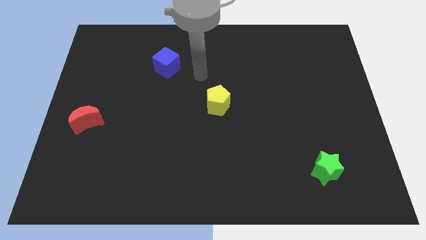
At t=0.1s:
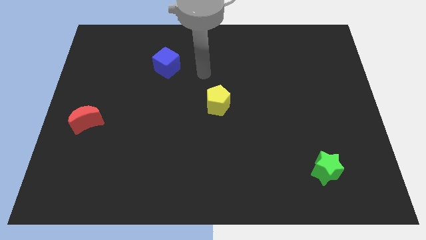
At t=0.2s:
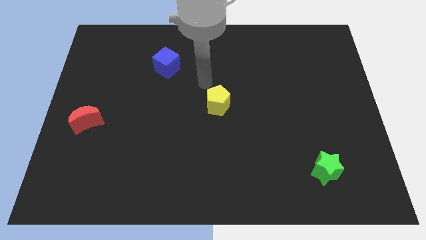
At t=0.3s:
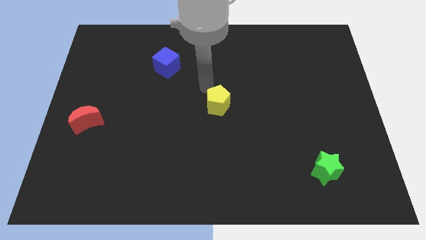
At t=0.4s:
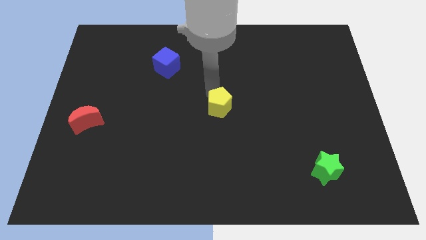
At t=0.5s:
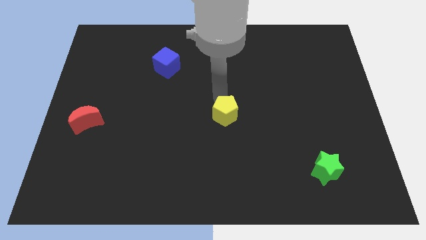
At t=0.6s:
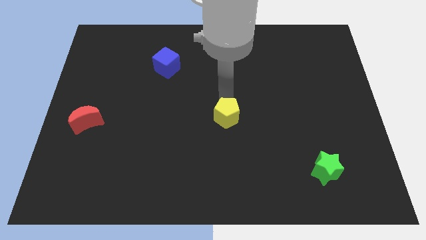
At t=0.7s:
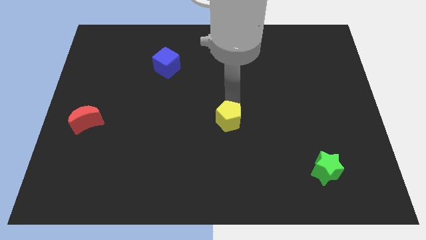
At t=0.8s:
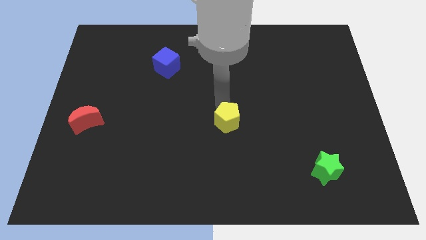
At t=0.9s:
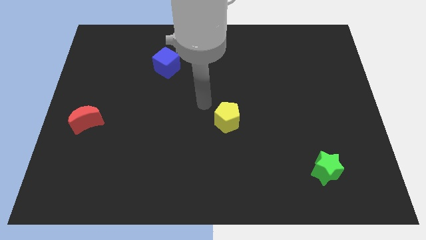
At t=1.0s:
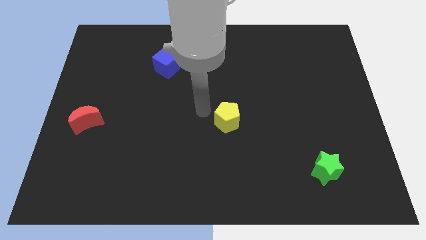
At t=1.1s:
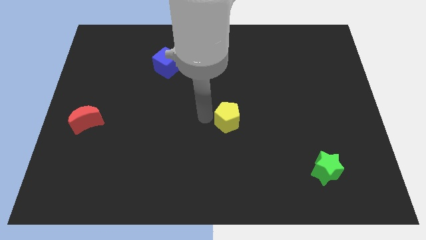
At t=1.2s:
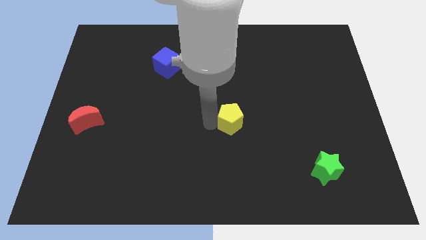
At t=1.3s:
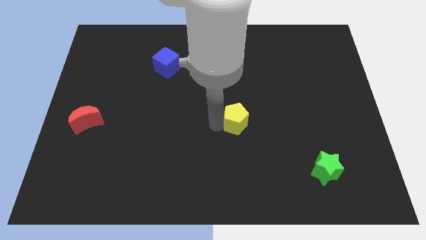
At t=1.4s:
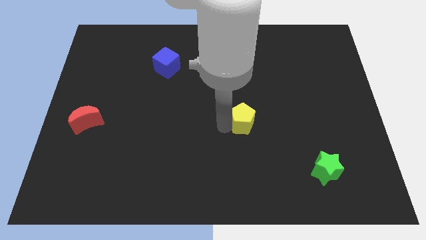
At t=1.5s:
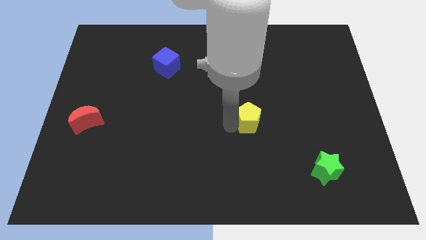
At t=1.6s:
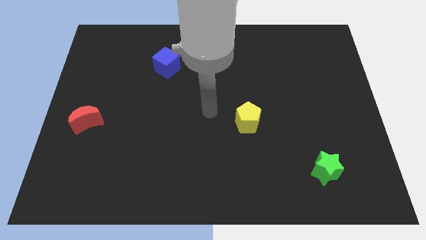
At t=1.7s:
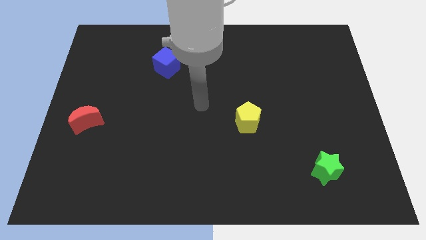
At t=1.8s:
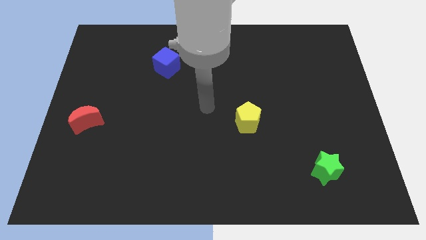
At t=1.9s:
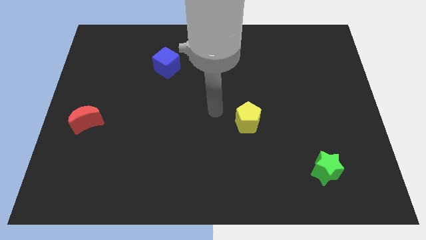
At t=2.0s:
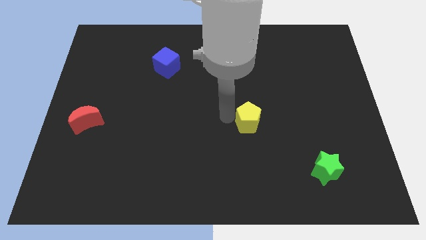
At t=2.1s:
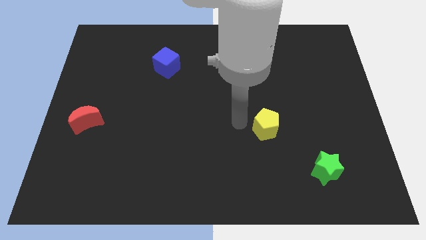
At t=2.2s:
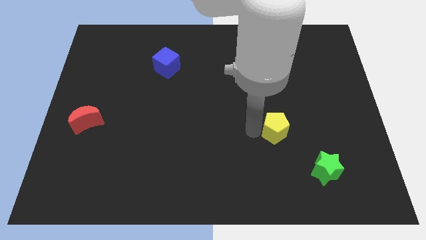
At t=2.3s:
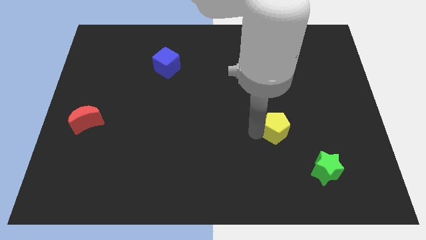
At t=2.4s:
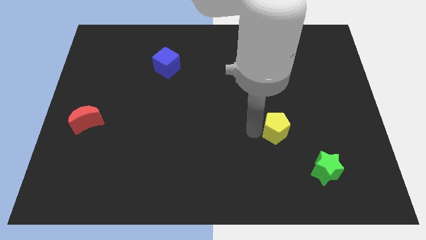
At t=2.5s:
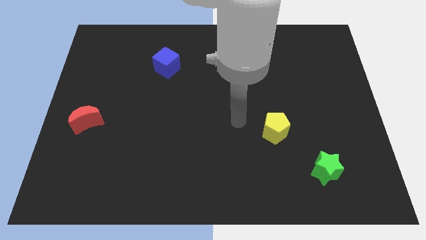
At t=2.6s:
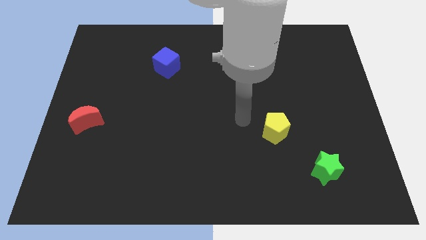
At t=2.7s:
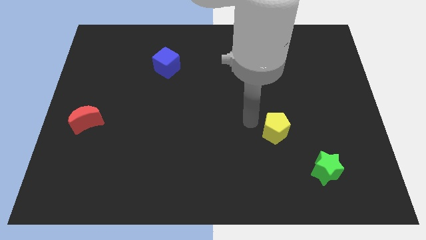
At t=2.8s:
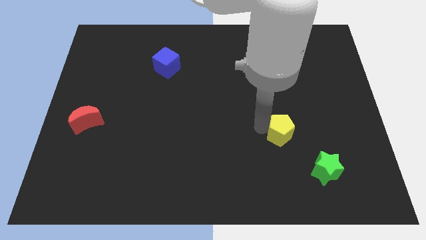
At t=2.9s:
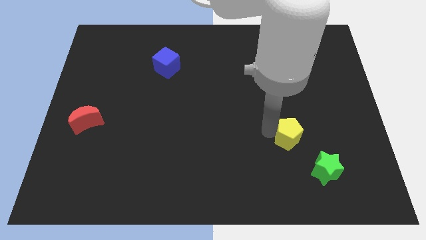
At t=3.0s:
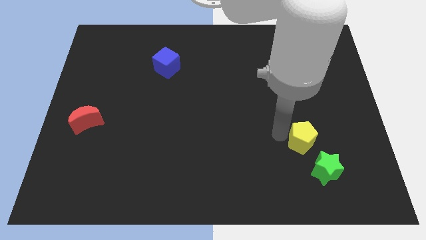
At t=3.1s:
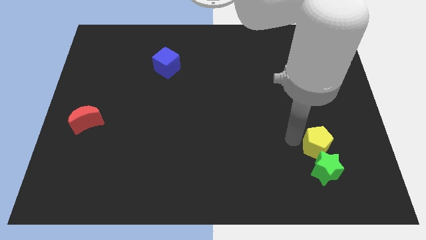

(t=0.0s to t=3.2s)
move the pentagon next to the green block

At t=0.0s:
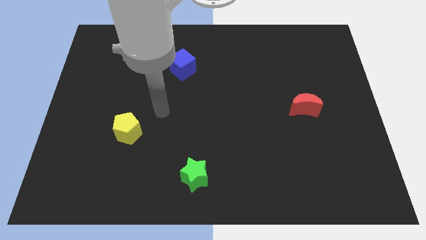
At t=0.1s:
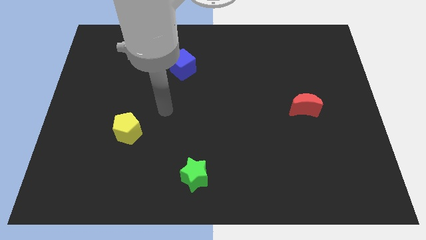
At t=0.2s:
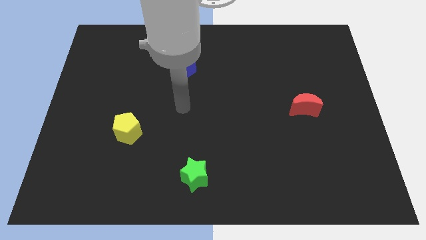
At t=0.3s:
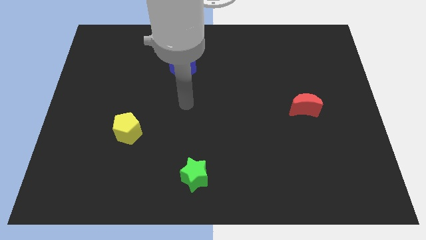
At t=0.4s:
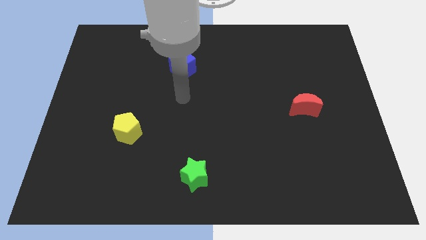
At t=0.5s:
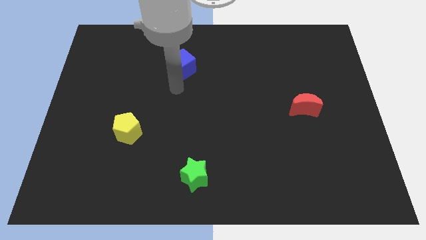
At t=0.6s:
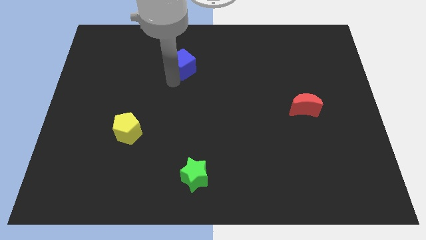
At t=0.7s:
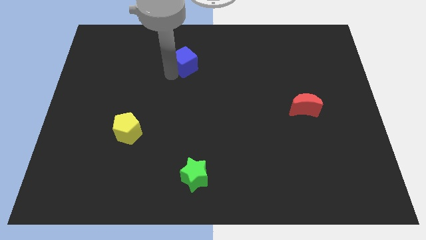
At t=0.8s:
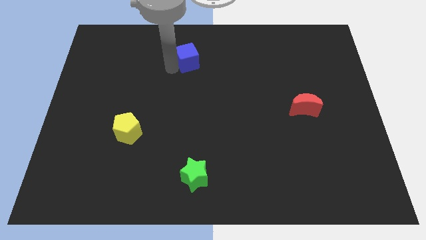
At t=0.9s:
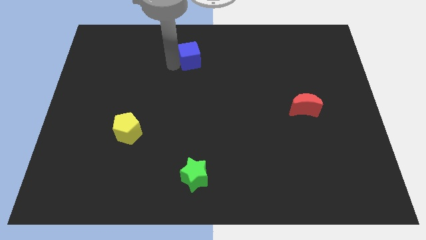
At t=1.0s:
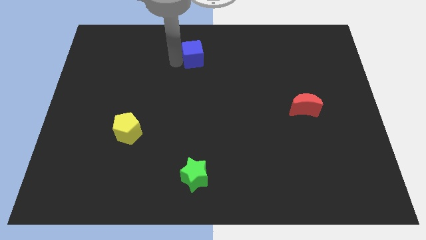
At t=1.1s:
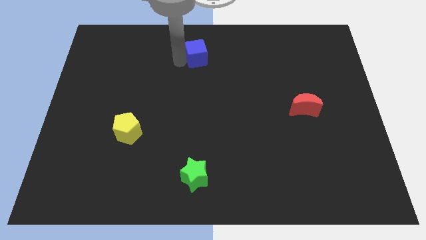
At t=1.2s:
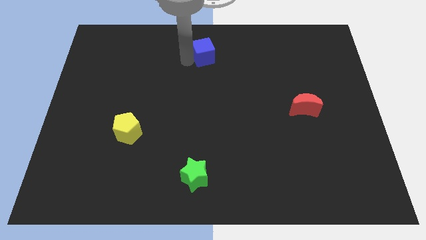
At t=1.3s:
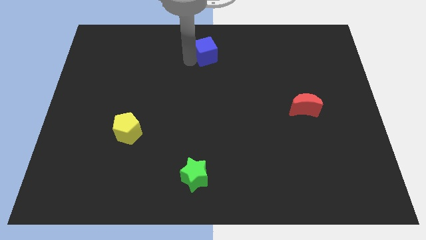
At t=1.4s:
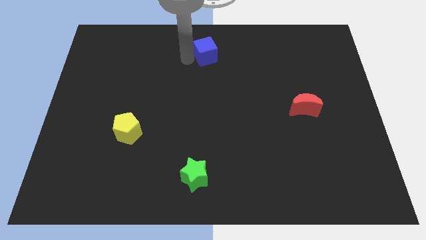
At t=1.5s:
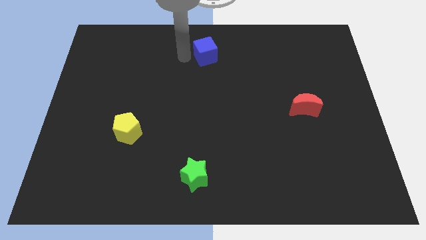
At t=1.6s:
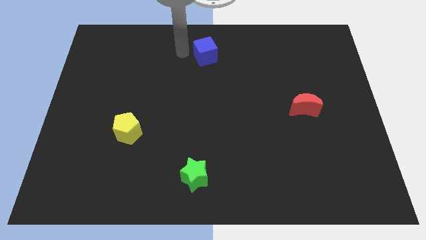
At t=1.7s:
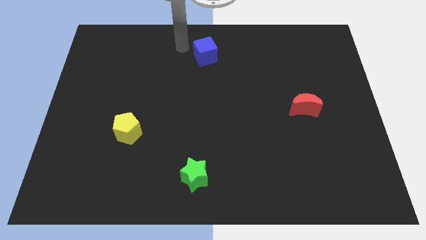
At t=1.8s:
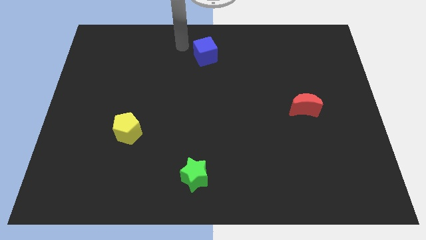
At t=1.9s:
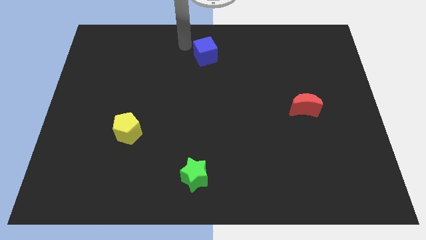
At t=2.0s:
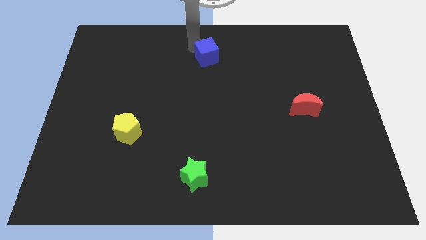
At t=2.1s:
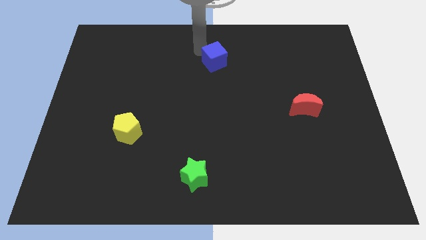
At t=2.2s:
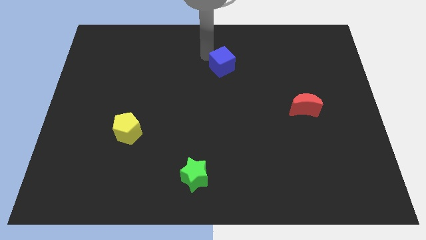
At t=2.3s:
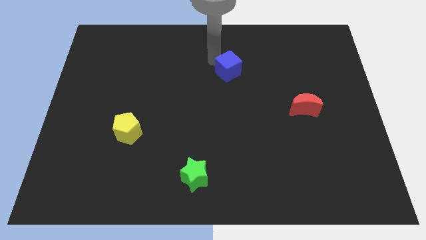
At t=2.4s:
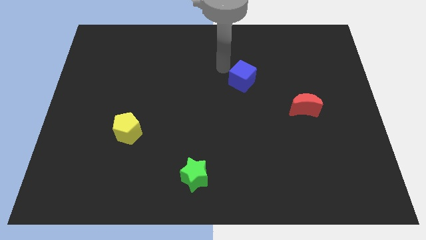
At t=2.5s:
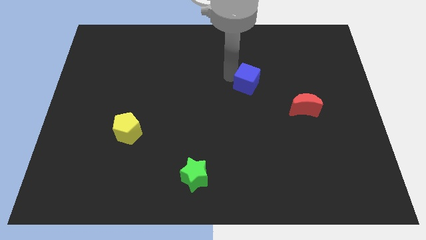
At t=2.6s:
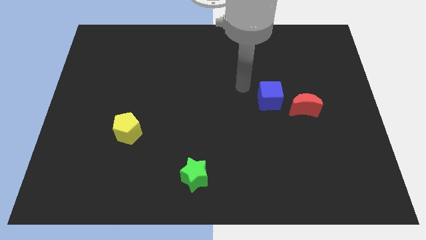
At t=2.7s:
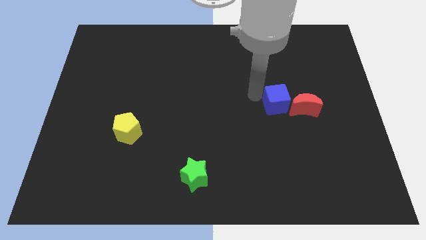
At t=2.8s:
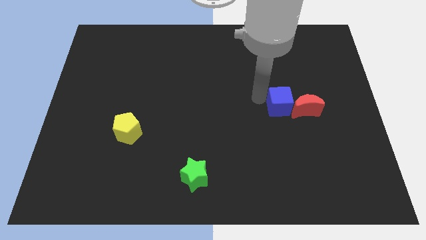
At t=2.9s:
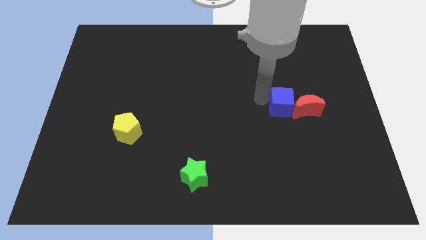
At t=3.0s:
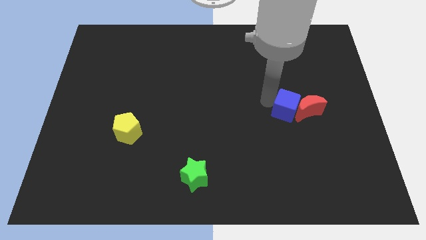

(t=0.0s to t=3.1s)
put the blue block close to the red moon

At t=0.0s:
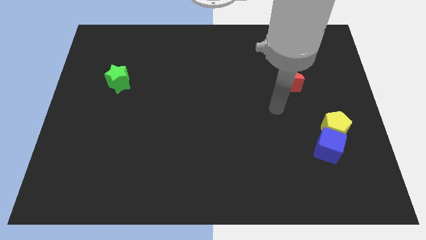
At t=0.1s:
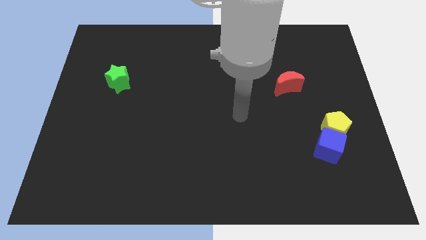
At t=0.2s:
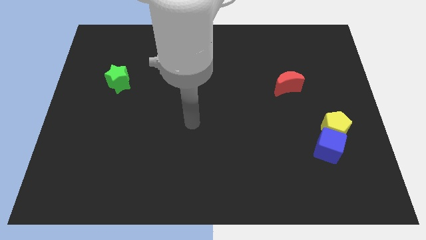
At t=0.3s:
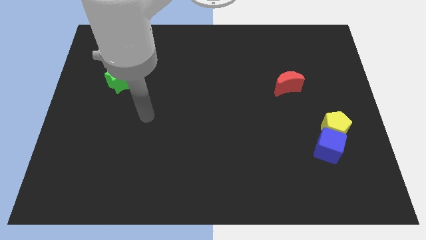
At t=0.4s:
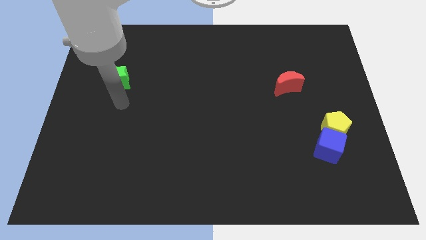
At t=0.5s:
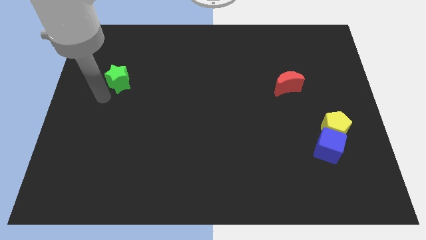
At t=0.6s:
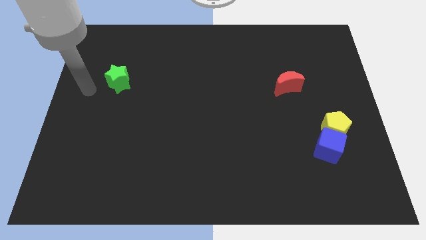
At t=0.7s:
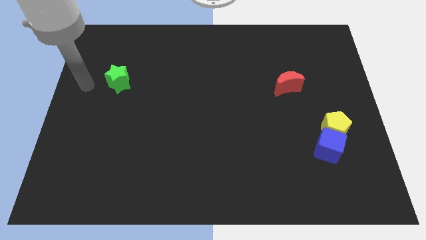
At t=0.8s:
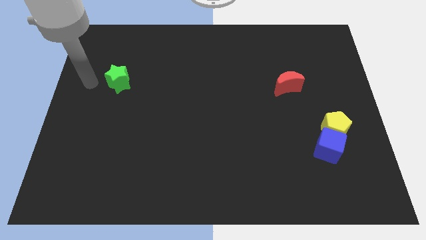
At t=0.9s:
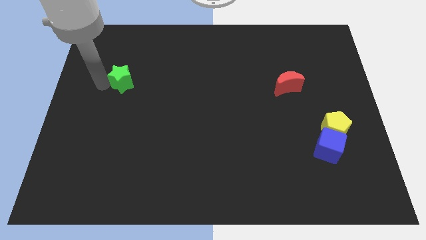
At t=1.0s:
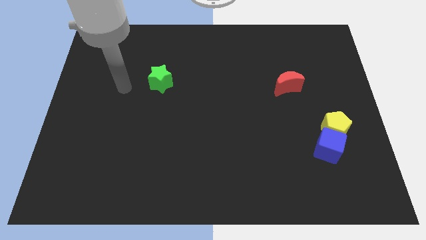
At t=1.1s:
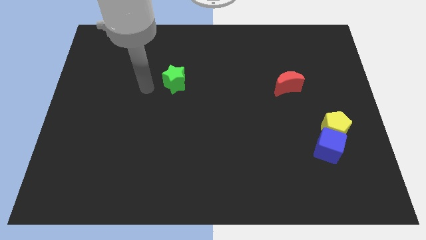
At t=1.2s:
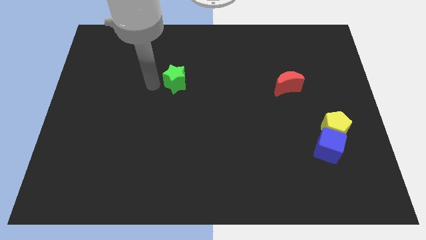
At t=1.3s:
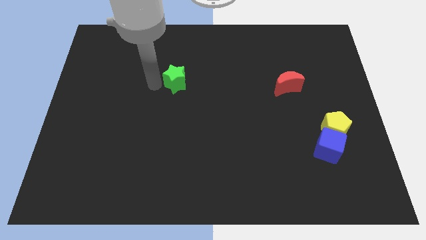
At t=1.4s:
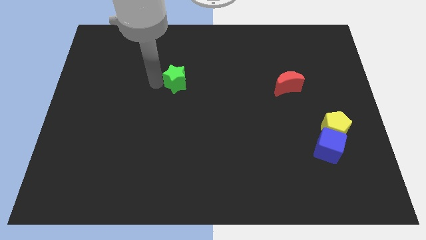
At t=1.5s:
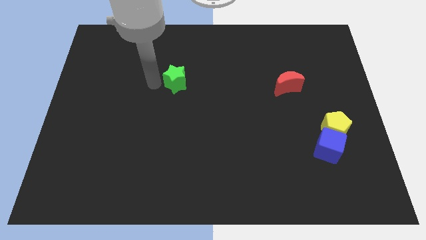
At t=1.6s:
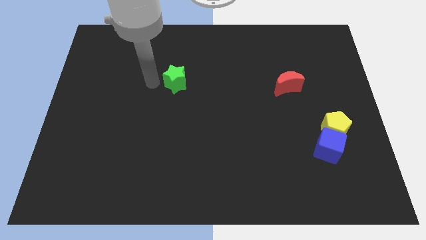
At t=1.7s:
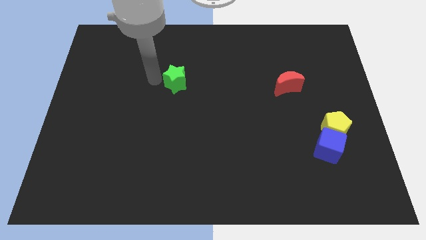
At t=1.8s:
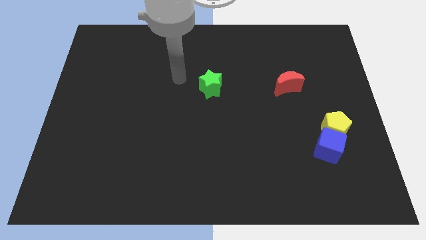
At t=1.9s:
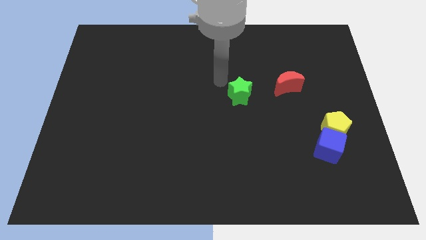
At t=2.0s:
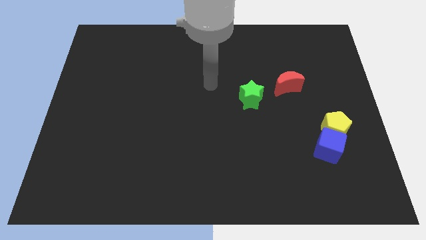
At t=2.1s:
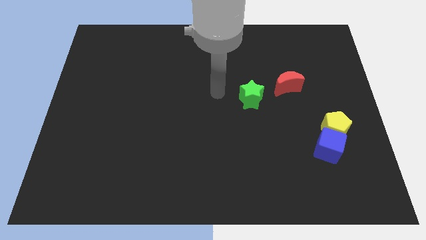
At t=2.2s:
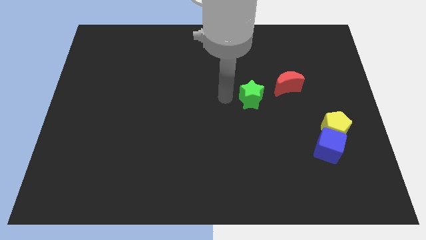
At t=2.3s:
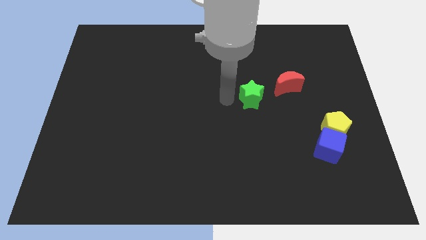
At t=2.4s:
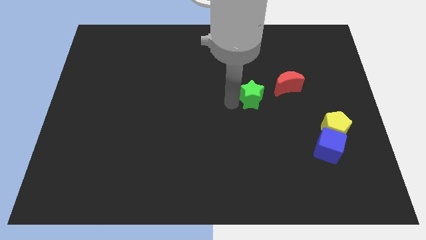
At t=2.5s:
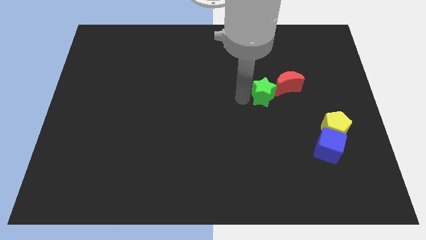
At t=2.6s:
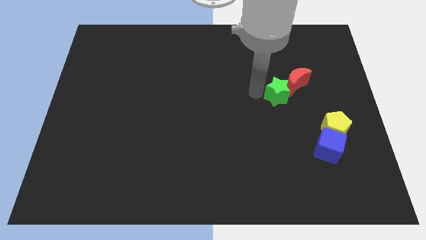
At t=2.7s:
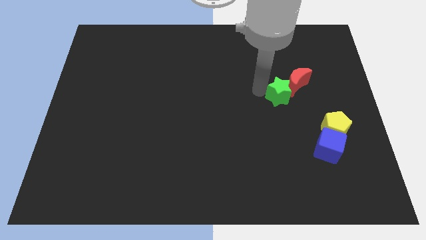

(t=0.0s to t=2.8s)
slide the star next to the red block
